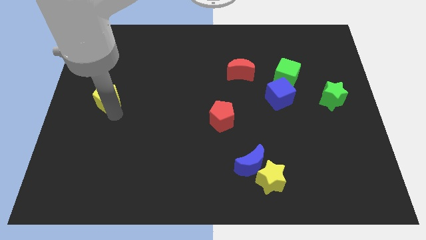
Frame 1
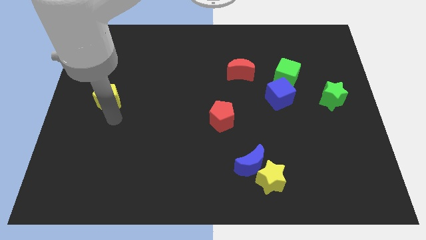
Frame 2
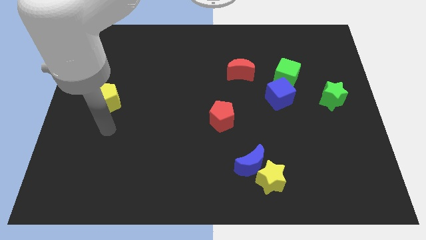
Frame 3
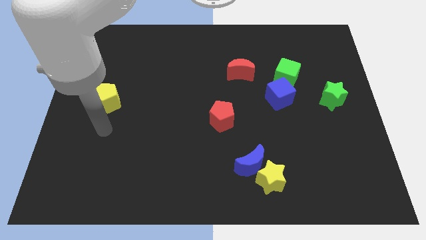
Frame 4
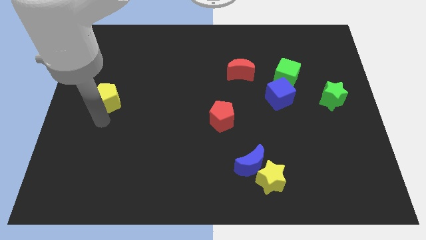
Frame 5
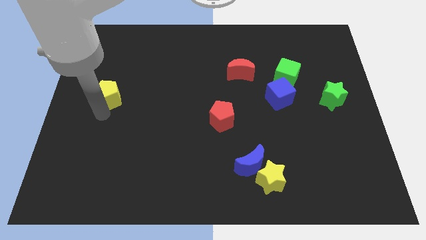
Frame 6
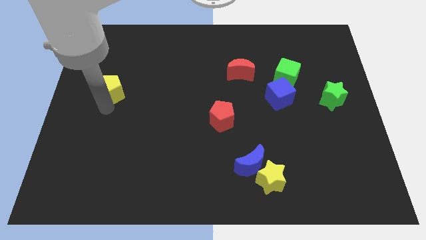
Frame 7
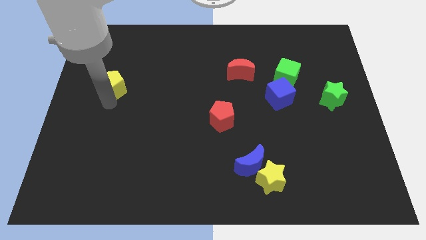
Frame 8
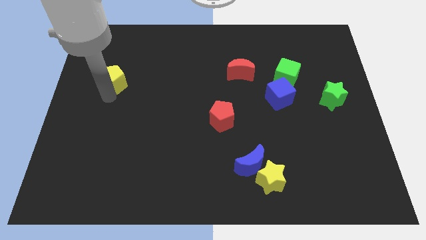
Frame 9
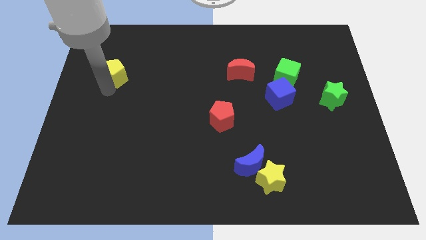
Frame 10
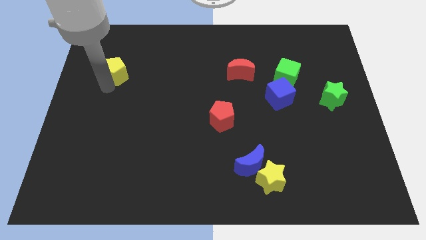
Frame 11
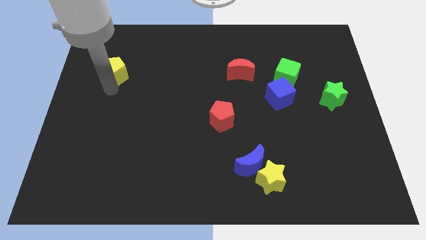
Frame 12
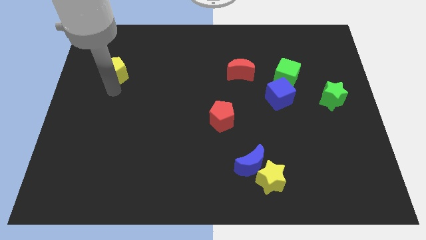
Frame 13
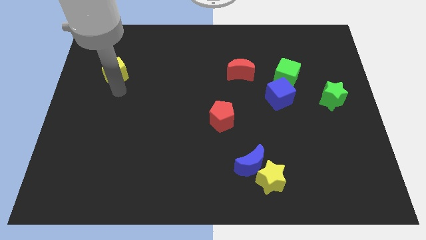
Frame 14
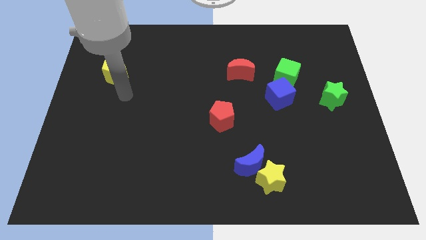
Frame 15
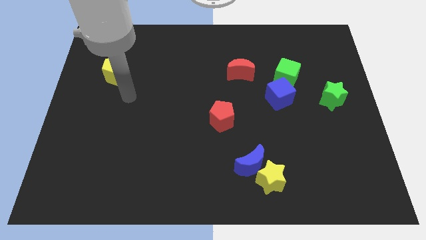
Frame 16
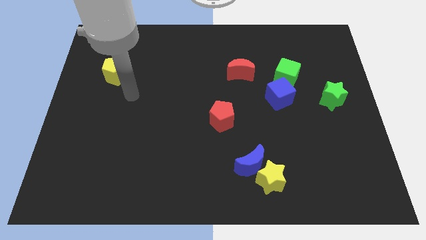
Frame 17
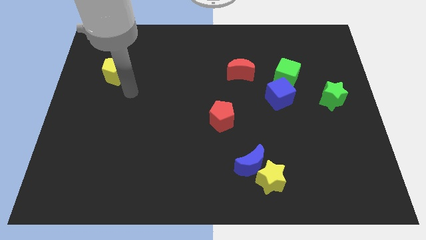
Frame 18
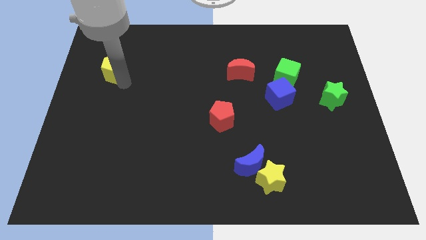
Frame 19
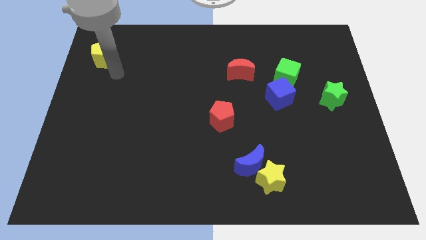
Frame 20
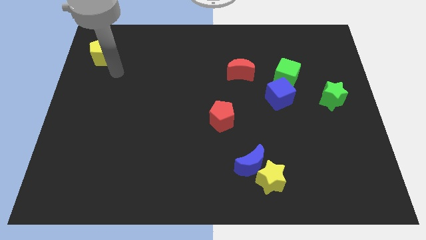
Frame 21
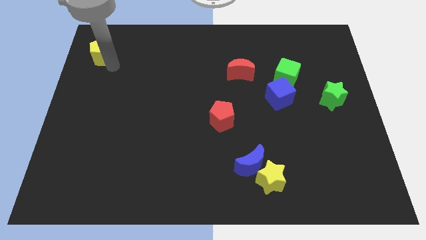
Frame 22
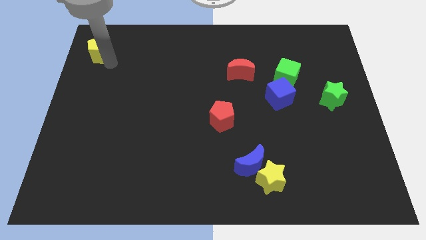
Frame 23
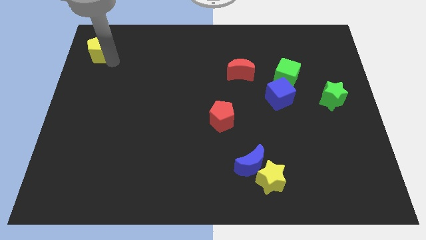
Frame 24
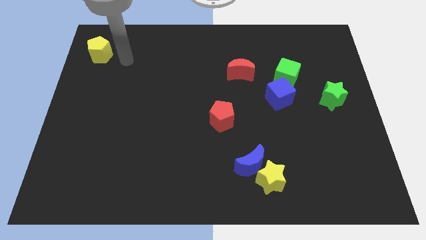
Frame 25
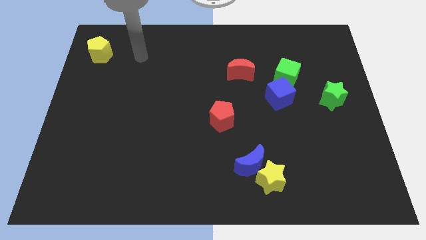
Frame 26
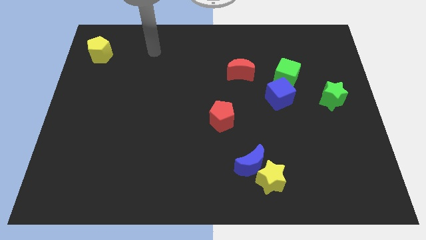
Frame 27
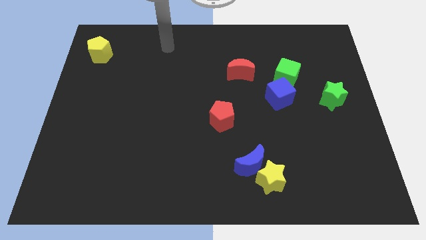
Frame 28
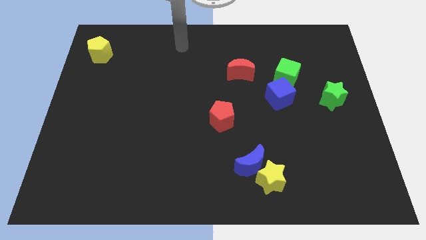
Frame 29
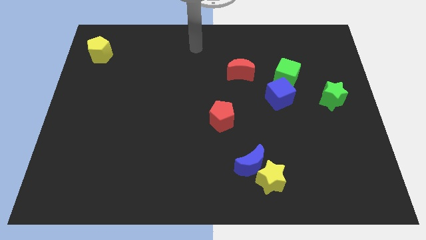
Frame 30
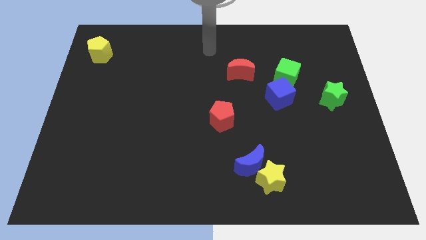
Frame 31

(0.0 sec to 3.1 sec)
place the yellow pentagon at the top left

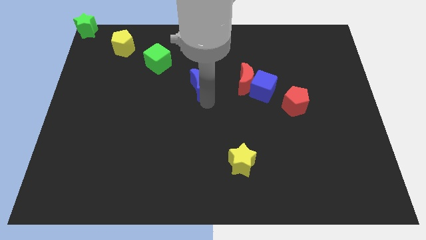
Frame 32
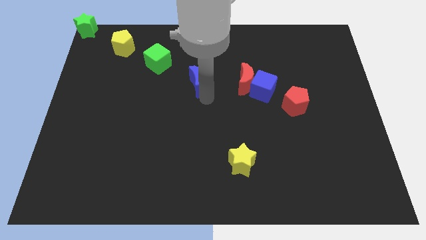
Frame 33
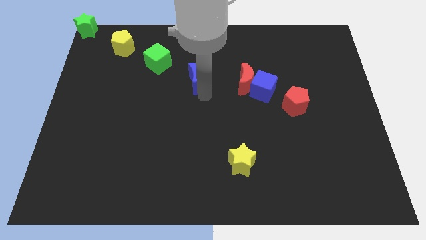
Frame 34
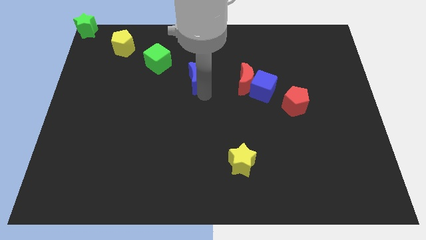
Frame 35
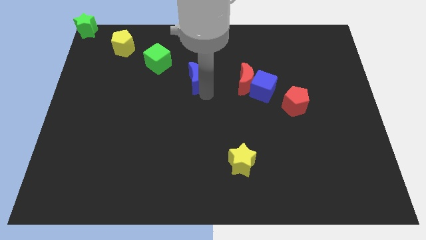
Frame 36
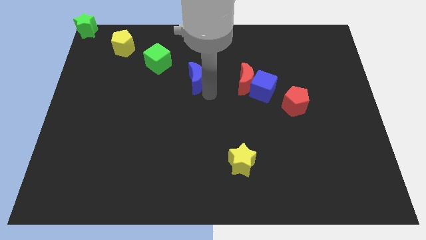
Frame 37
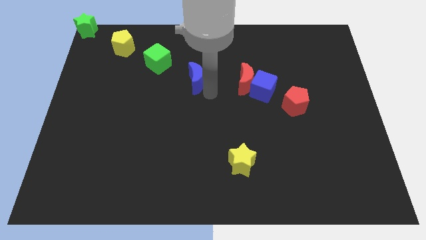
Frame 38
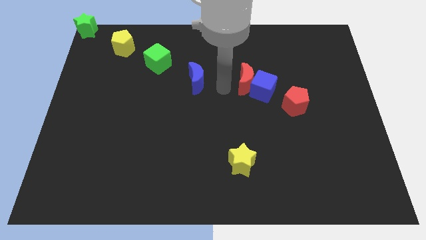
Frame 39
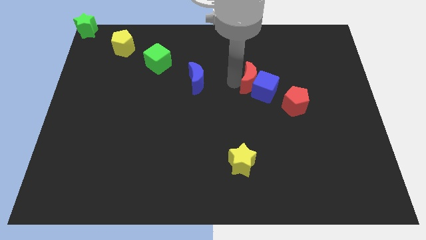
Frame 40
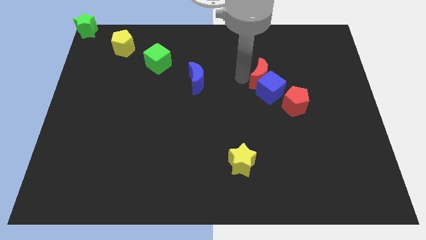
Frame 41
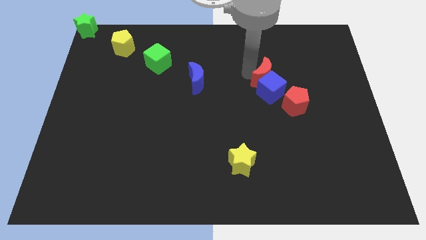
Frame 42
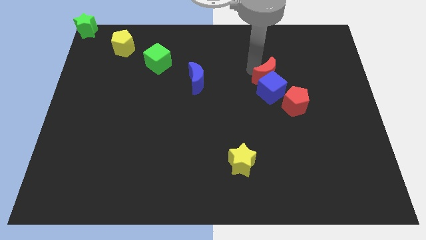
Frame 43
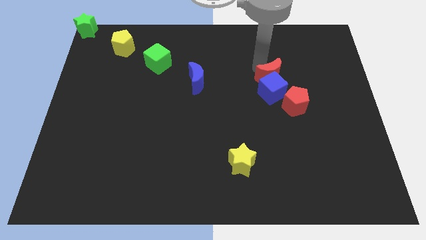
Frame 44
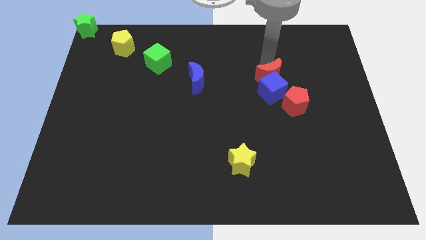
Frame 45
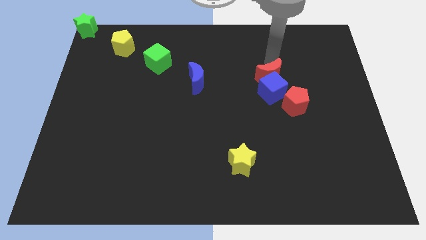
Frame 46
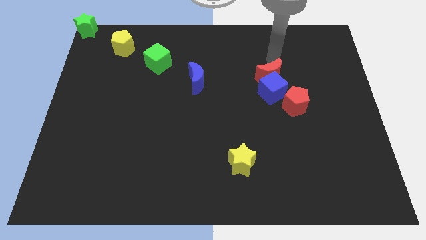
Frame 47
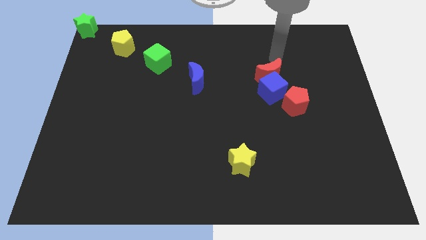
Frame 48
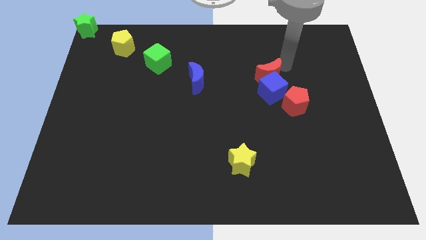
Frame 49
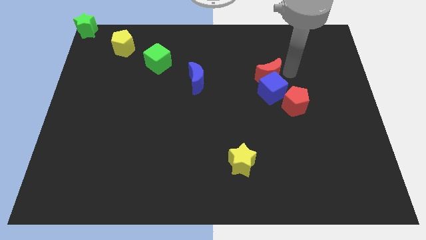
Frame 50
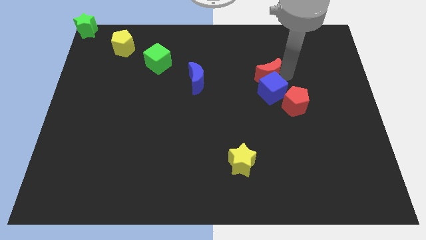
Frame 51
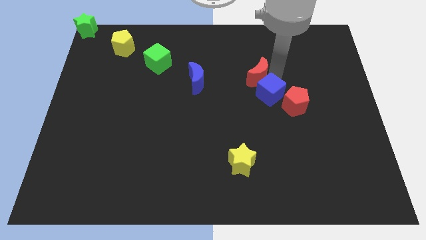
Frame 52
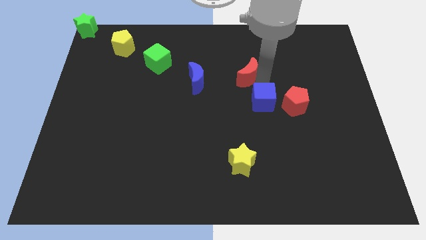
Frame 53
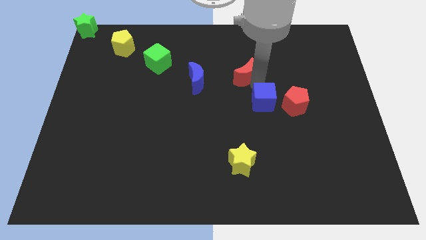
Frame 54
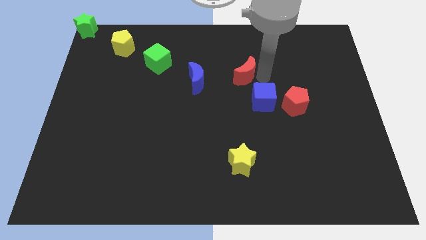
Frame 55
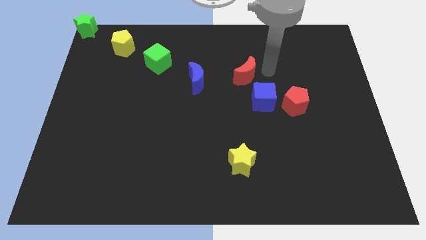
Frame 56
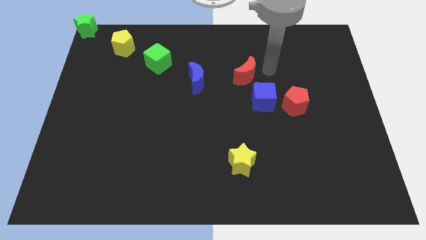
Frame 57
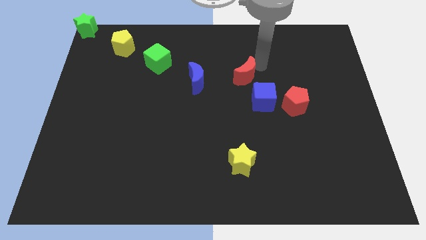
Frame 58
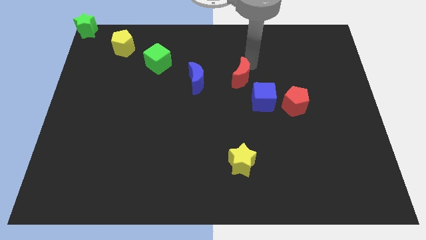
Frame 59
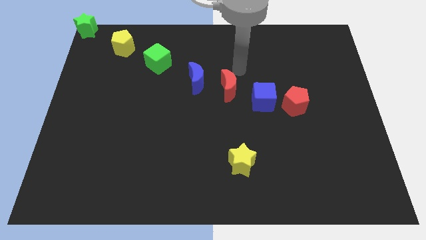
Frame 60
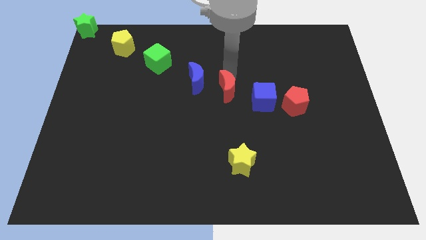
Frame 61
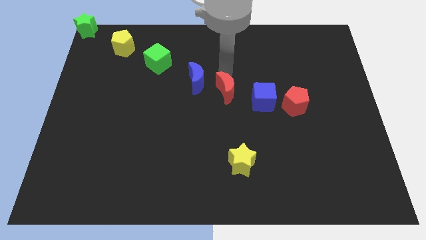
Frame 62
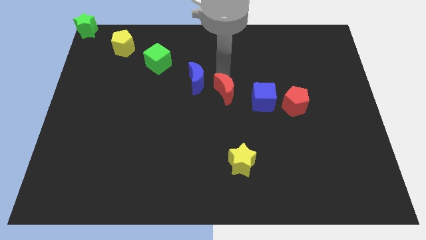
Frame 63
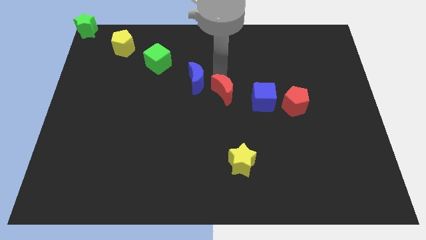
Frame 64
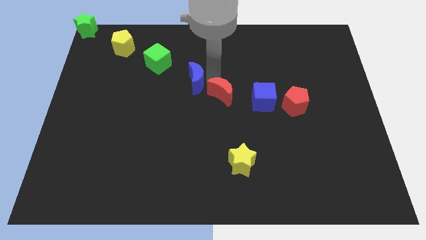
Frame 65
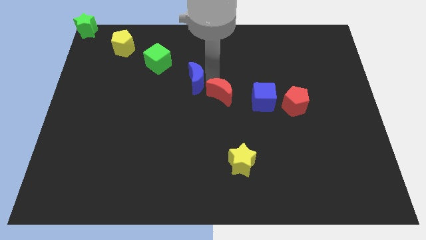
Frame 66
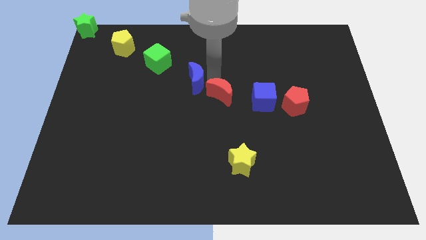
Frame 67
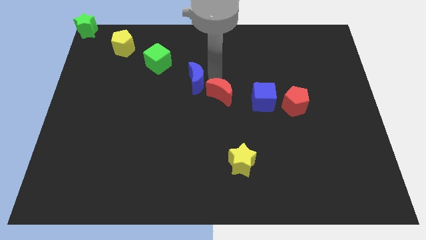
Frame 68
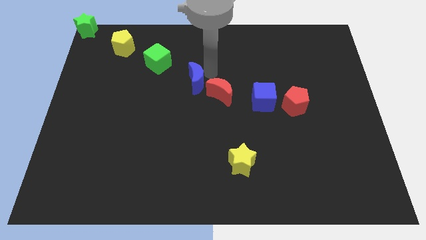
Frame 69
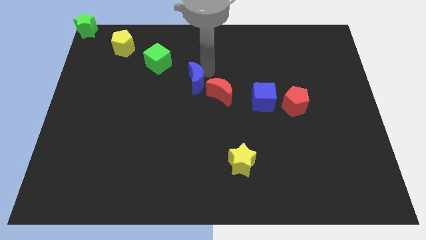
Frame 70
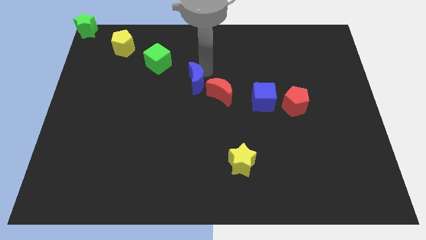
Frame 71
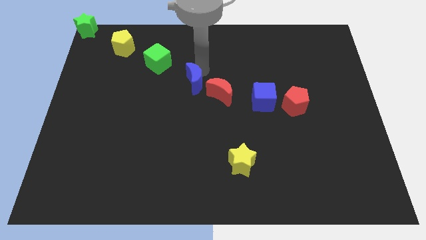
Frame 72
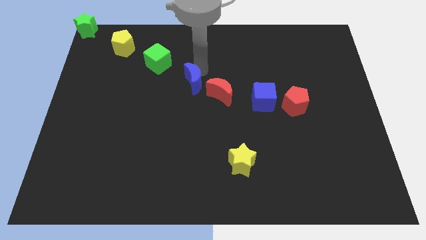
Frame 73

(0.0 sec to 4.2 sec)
place the red moon diagonal to the blue moon

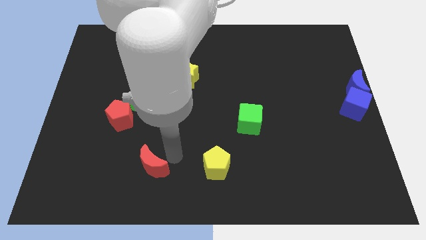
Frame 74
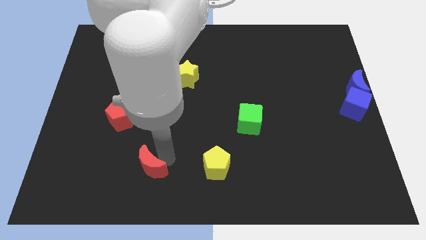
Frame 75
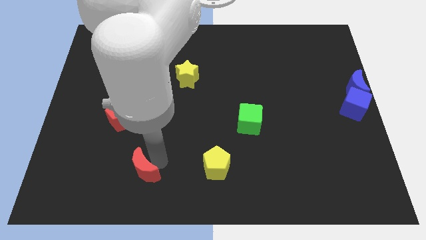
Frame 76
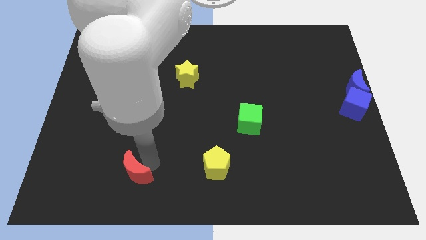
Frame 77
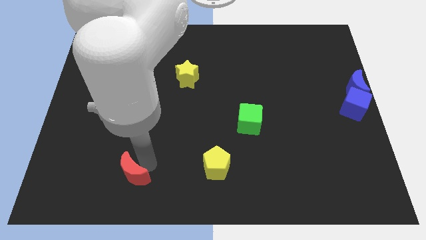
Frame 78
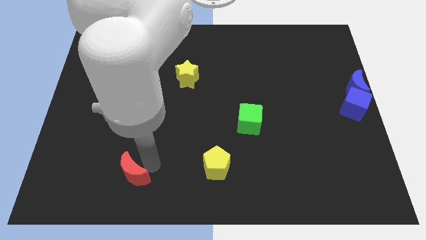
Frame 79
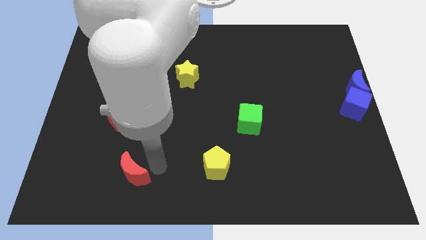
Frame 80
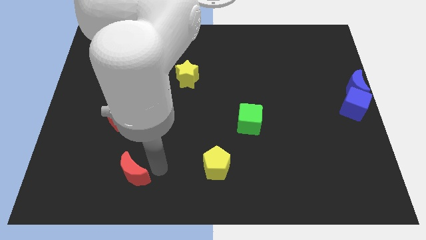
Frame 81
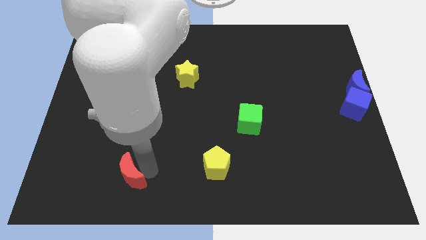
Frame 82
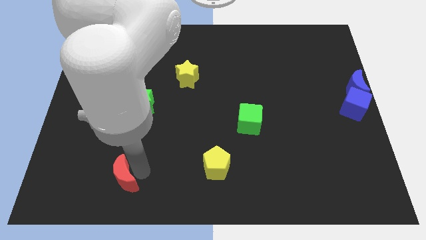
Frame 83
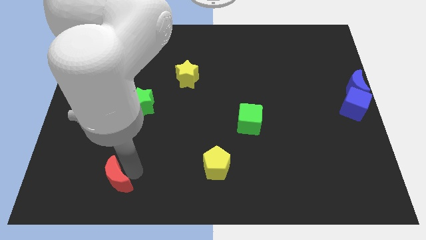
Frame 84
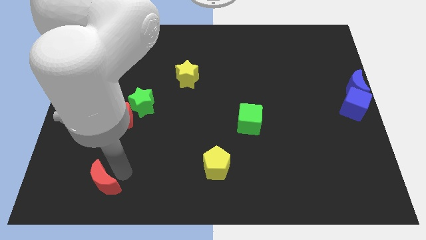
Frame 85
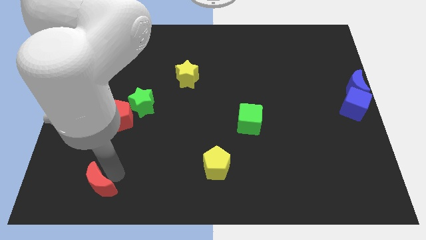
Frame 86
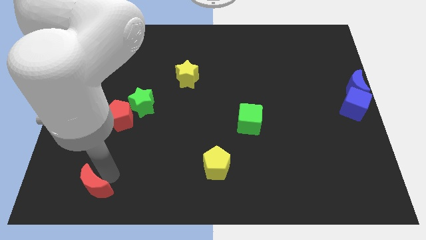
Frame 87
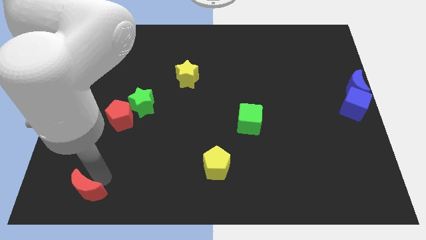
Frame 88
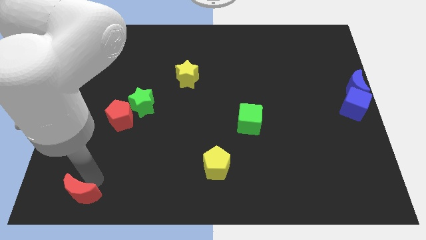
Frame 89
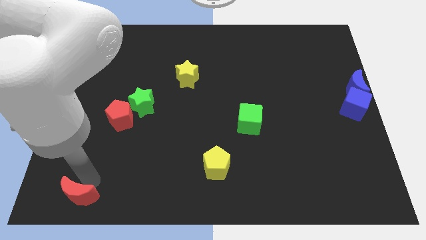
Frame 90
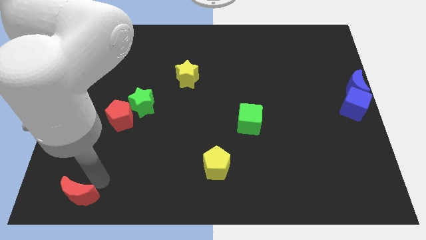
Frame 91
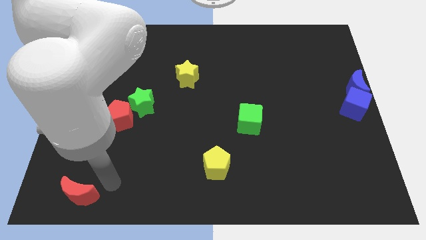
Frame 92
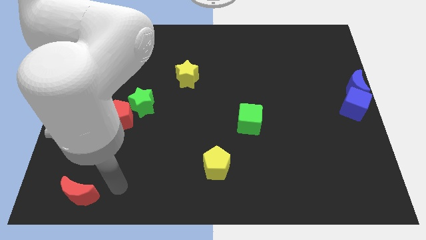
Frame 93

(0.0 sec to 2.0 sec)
push the red crescent to the bottom left side of the board
